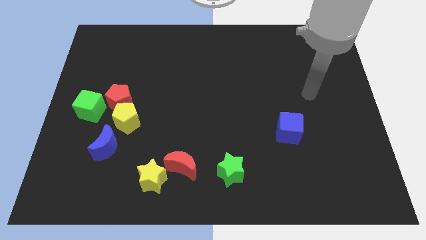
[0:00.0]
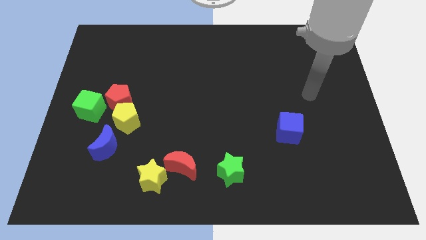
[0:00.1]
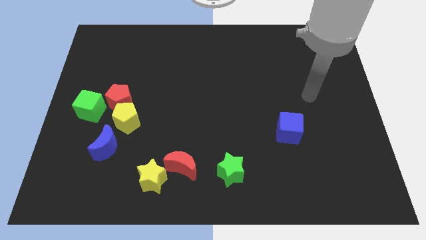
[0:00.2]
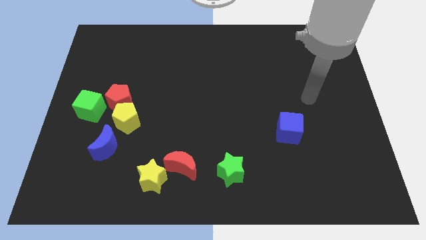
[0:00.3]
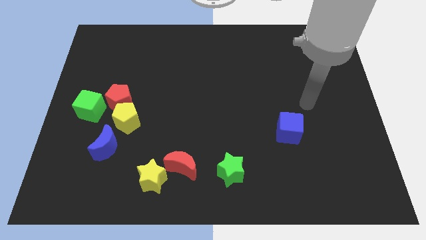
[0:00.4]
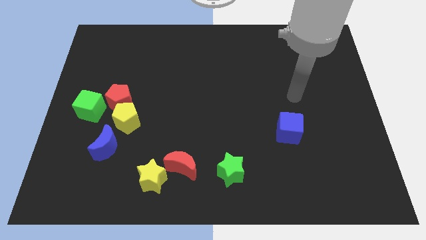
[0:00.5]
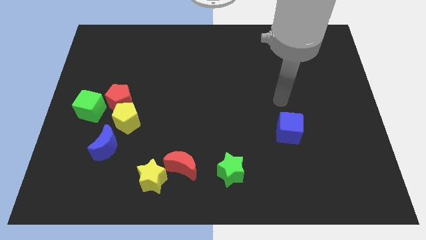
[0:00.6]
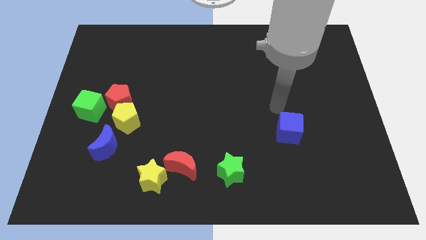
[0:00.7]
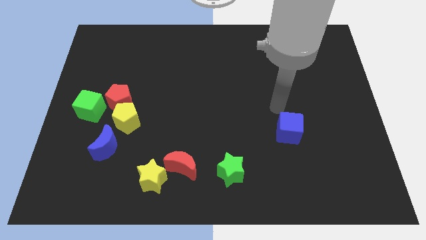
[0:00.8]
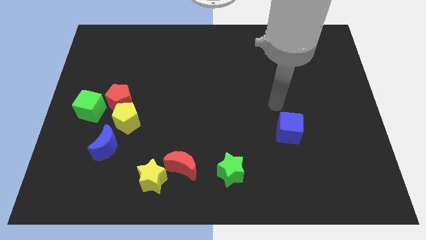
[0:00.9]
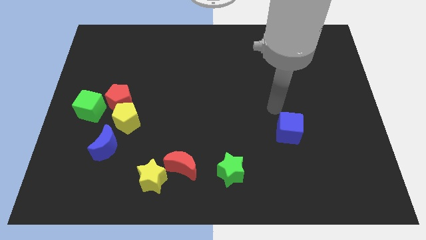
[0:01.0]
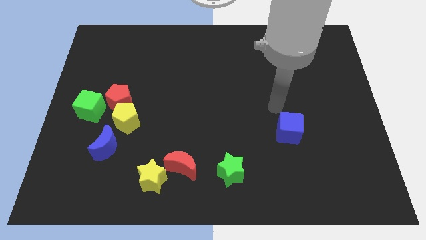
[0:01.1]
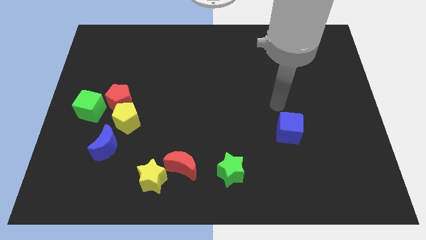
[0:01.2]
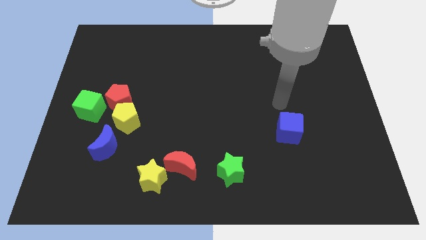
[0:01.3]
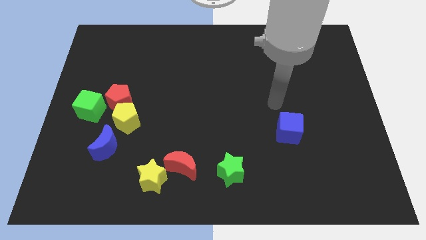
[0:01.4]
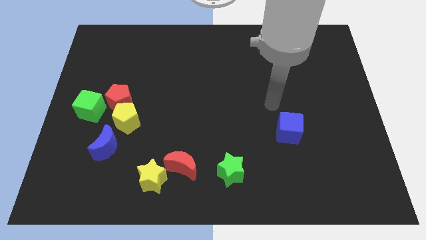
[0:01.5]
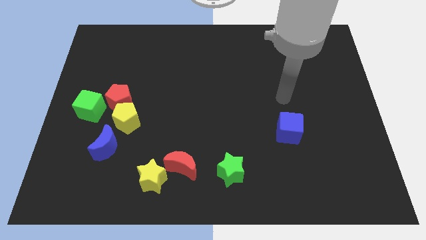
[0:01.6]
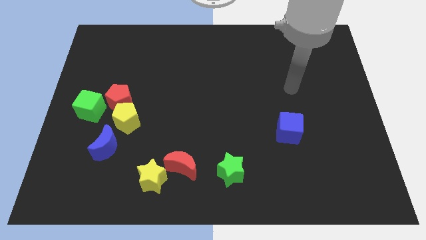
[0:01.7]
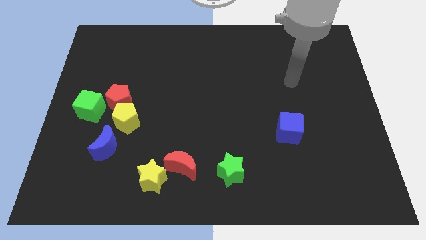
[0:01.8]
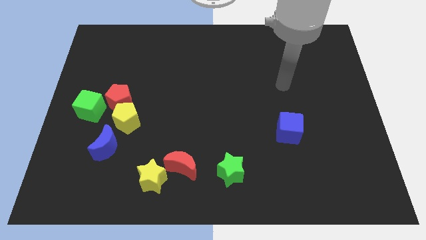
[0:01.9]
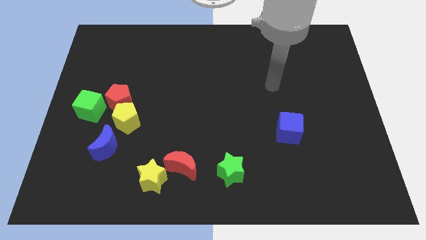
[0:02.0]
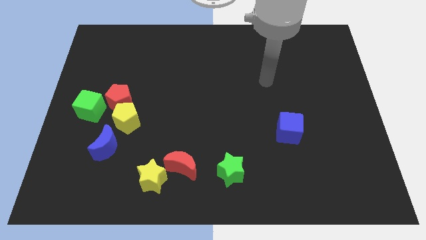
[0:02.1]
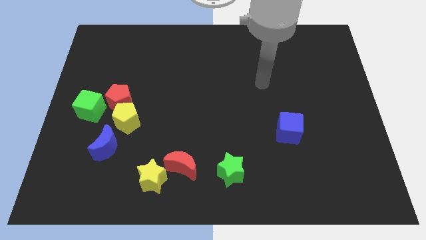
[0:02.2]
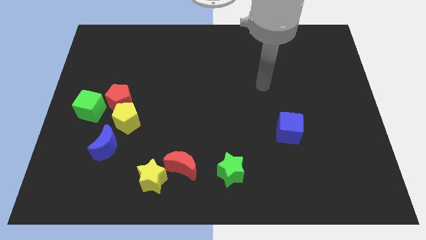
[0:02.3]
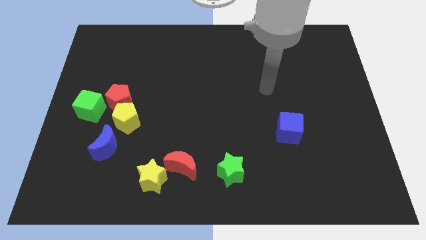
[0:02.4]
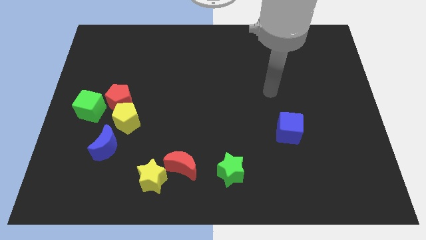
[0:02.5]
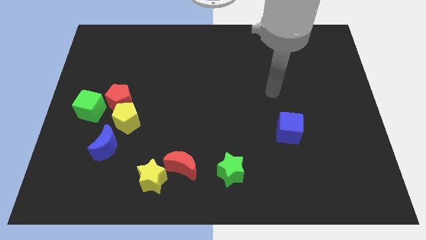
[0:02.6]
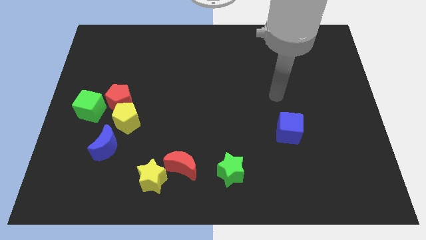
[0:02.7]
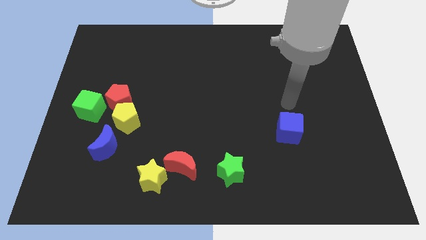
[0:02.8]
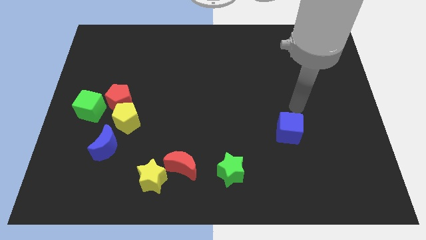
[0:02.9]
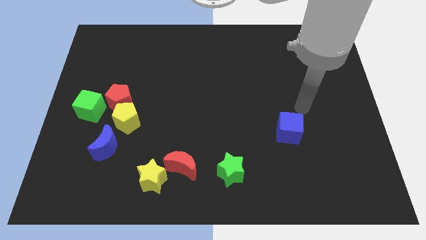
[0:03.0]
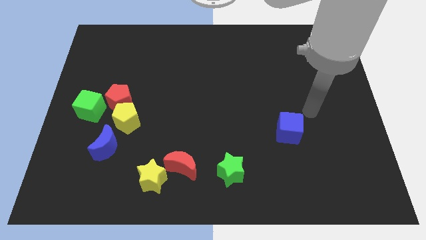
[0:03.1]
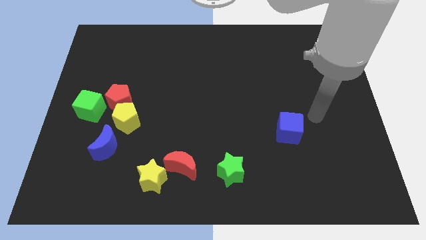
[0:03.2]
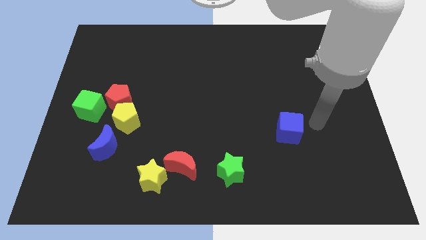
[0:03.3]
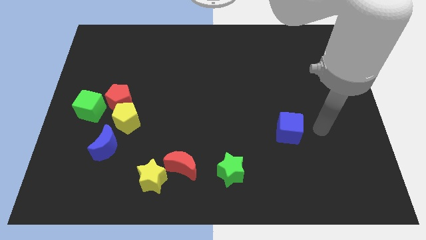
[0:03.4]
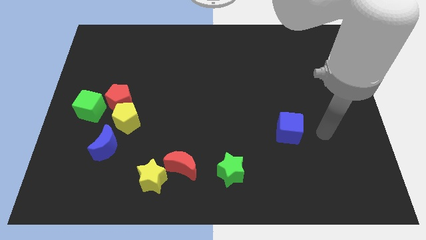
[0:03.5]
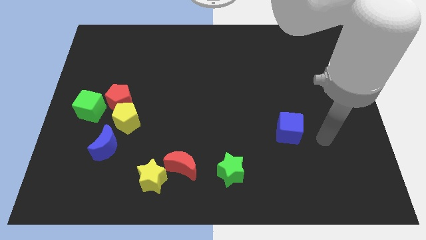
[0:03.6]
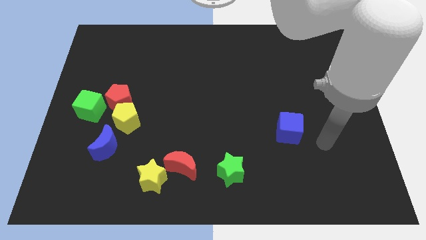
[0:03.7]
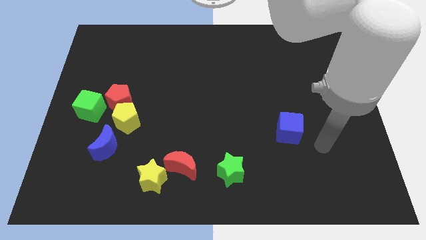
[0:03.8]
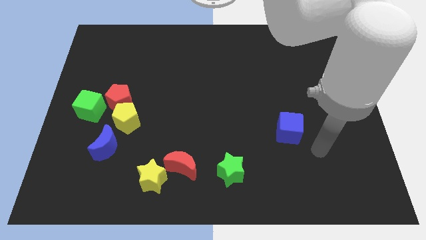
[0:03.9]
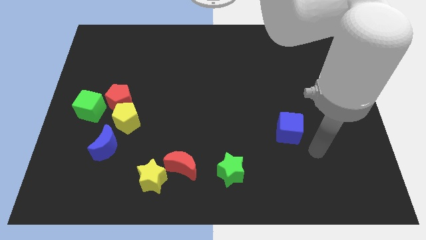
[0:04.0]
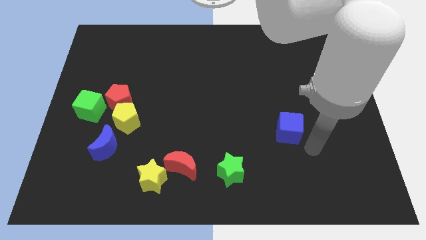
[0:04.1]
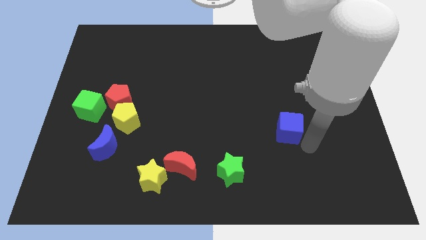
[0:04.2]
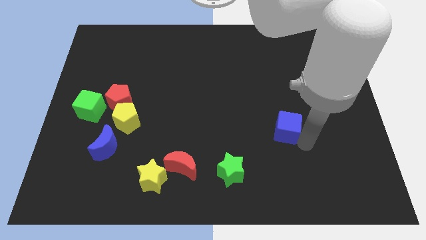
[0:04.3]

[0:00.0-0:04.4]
place your arm at the bottom right side of the blue cube

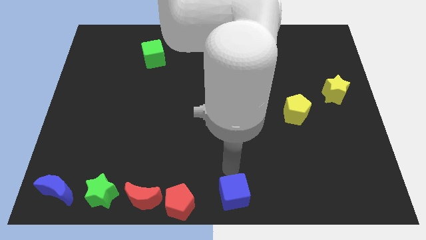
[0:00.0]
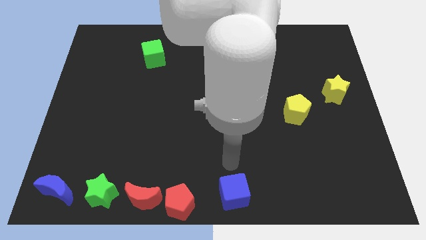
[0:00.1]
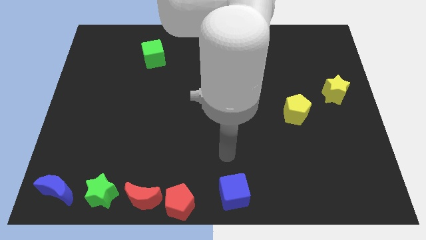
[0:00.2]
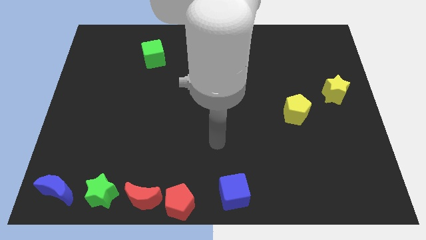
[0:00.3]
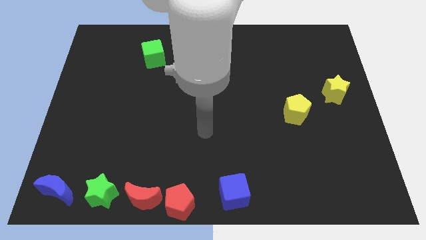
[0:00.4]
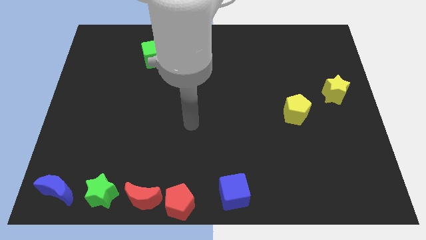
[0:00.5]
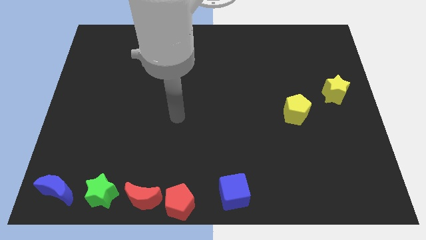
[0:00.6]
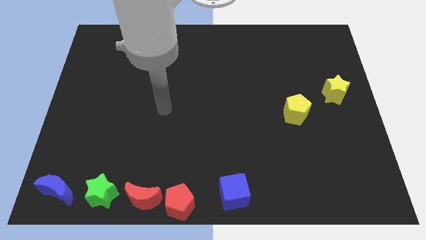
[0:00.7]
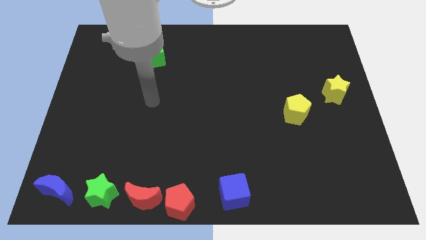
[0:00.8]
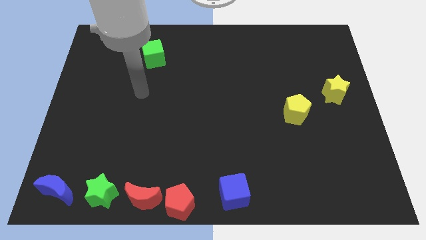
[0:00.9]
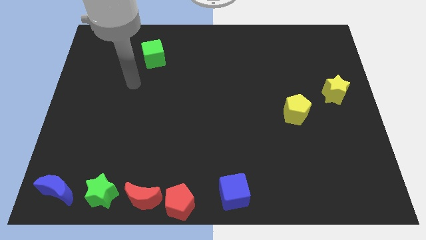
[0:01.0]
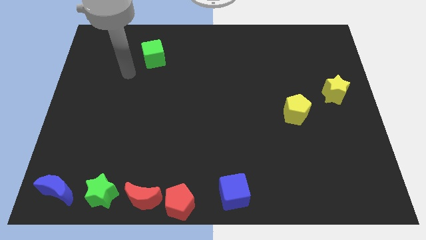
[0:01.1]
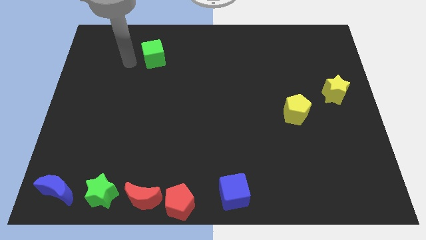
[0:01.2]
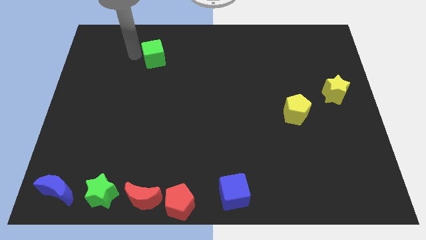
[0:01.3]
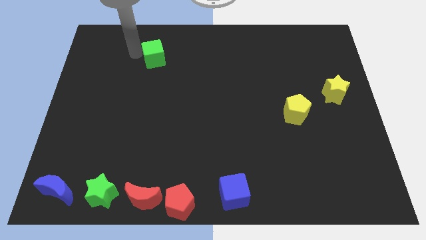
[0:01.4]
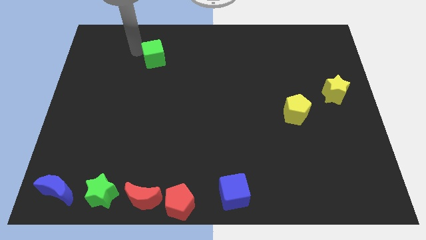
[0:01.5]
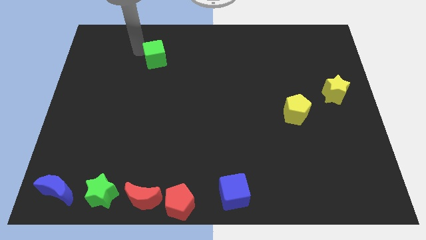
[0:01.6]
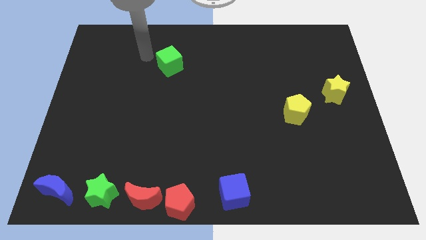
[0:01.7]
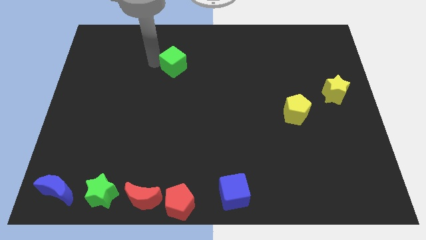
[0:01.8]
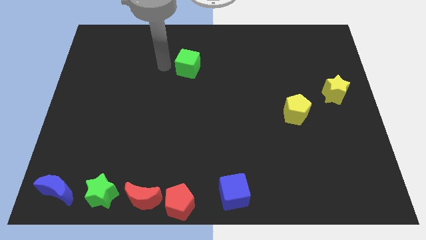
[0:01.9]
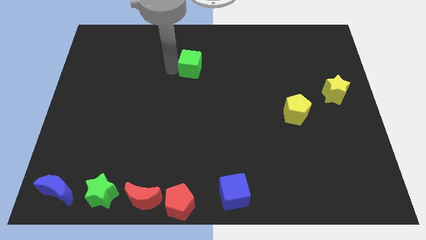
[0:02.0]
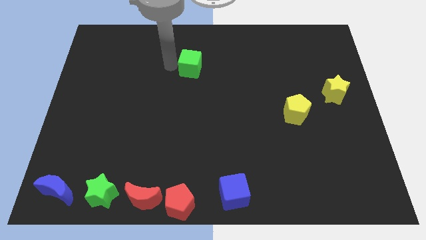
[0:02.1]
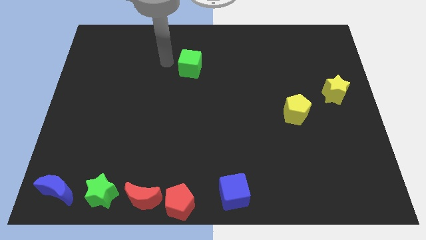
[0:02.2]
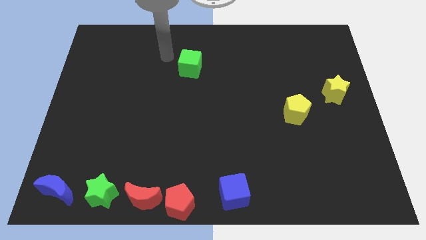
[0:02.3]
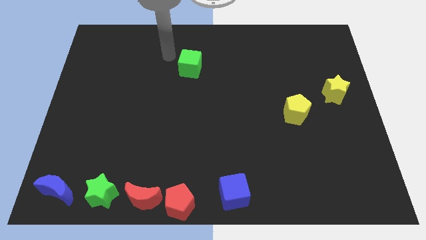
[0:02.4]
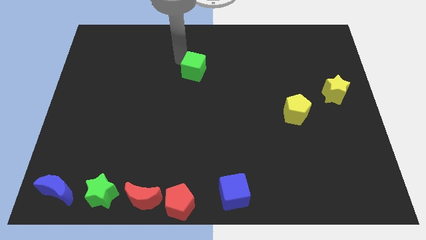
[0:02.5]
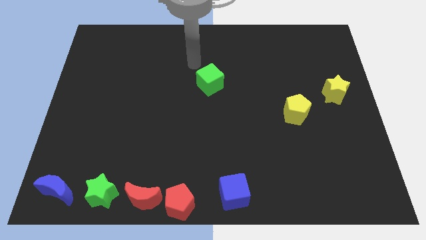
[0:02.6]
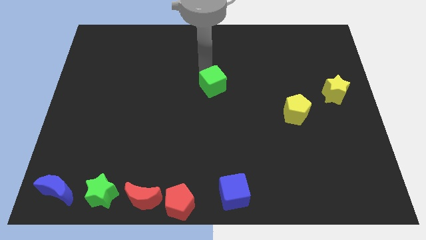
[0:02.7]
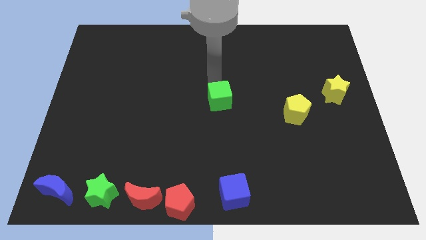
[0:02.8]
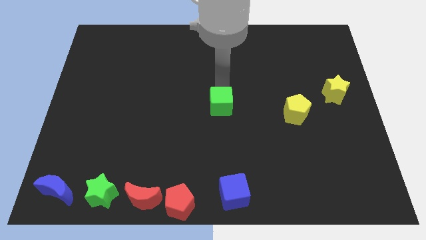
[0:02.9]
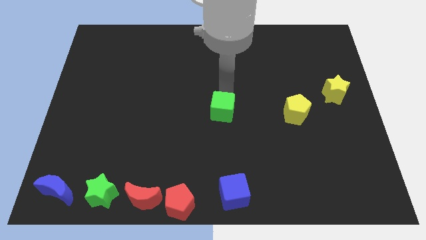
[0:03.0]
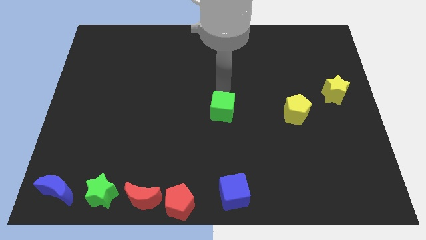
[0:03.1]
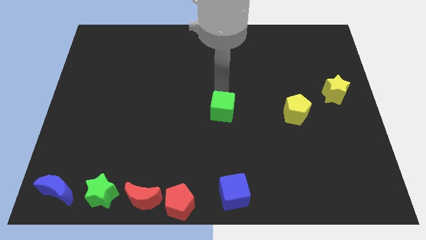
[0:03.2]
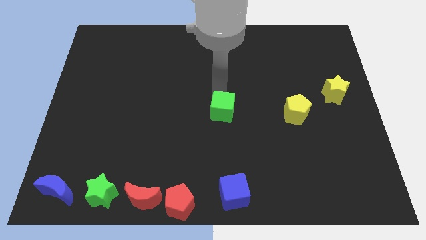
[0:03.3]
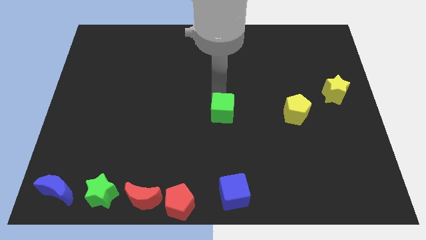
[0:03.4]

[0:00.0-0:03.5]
place the green cube vertically above the blue cube

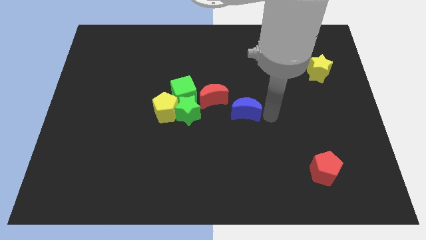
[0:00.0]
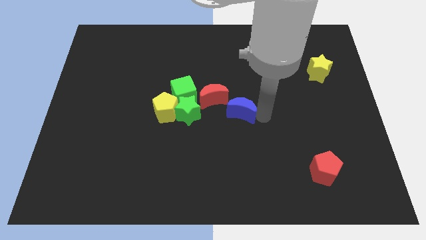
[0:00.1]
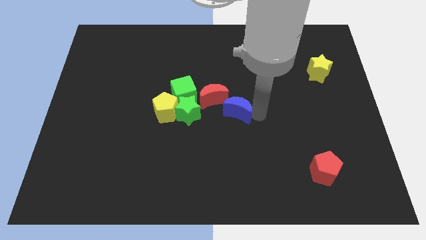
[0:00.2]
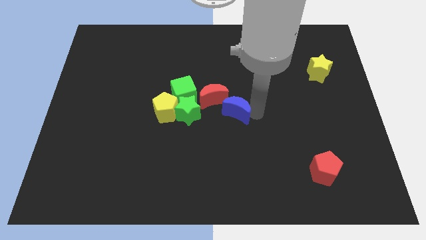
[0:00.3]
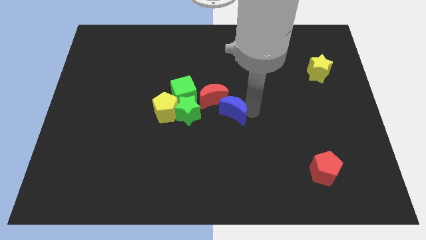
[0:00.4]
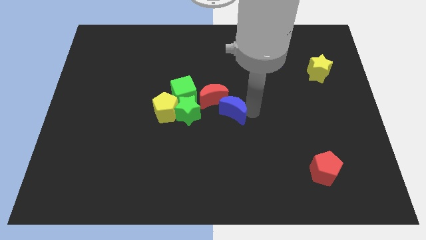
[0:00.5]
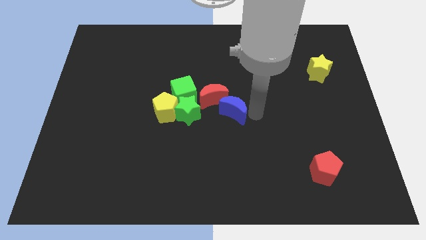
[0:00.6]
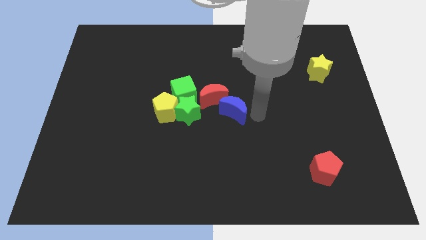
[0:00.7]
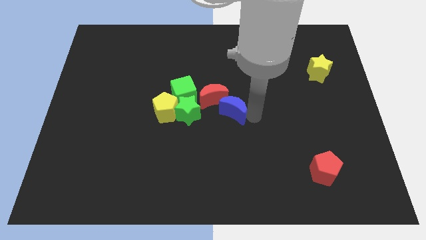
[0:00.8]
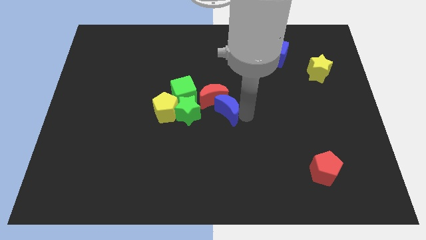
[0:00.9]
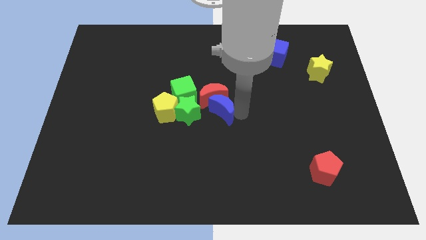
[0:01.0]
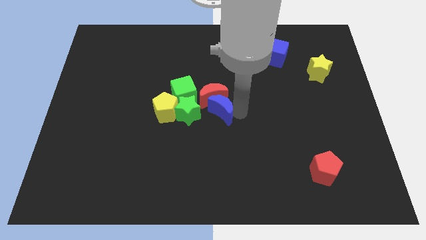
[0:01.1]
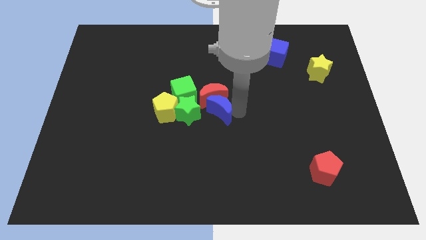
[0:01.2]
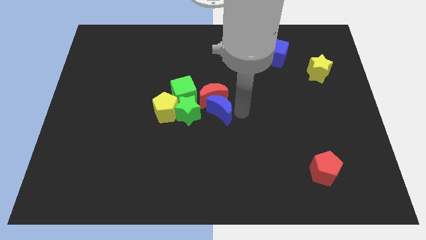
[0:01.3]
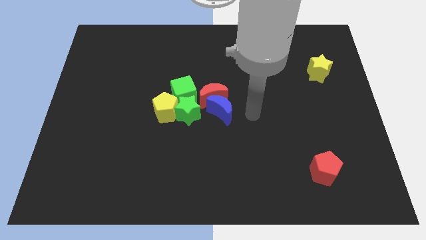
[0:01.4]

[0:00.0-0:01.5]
move the blue crescent to the bottom of the red crescent
